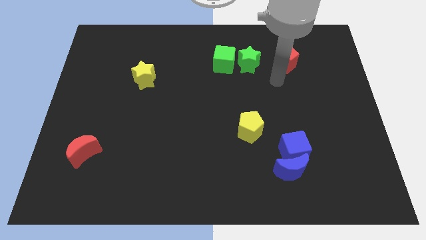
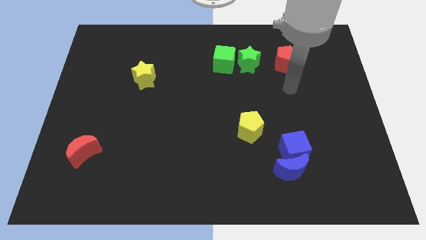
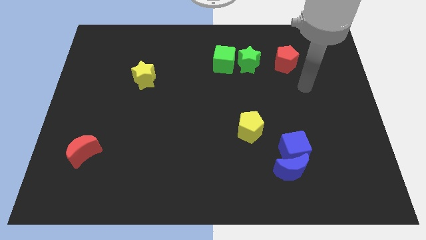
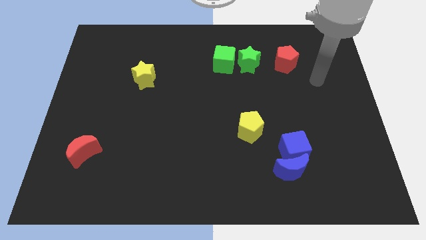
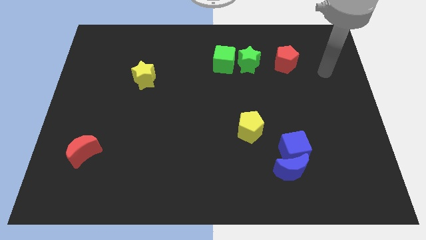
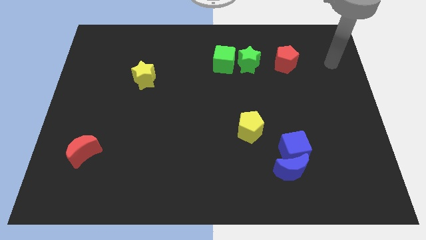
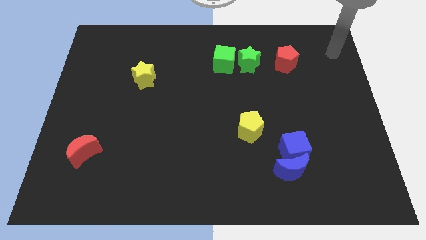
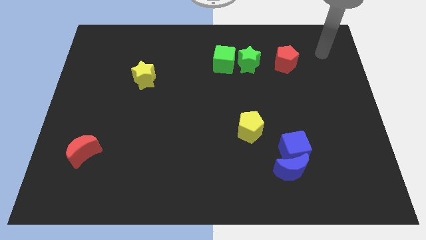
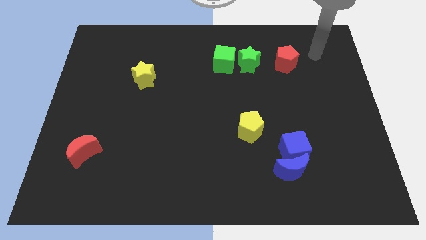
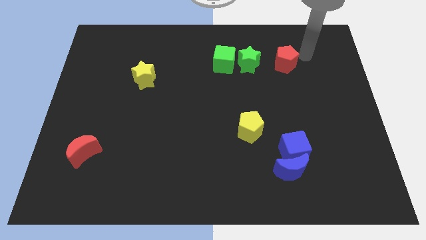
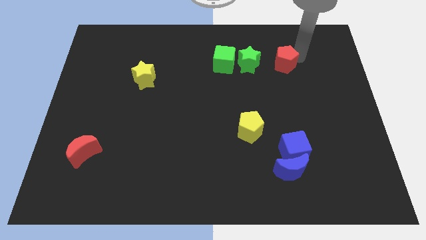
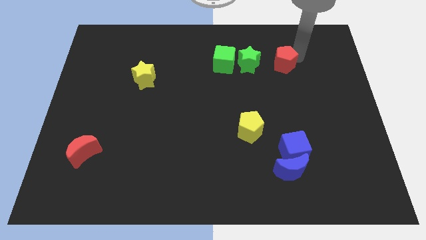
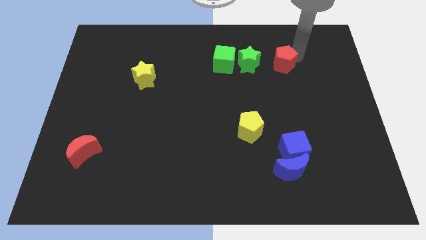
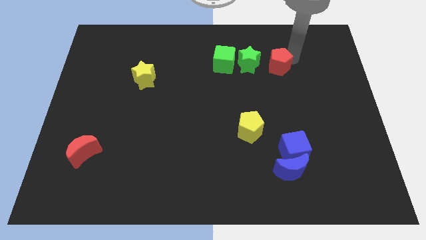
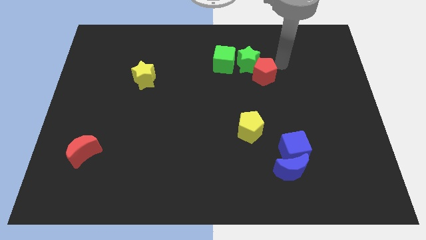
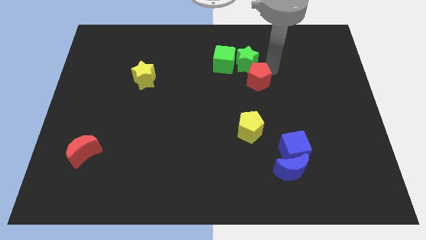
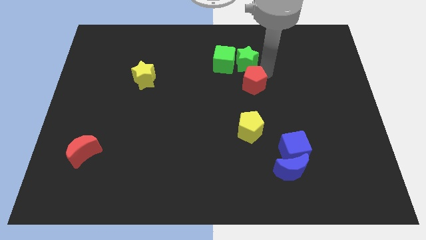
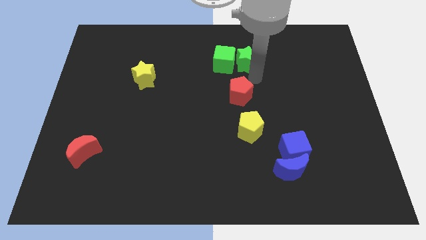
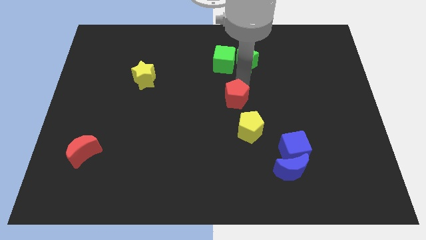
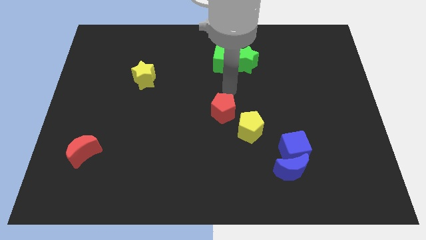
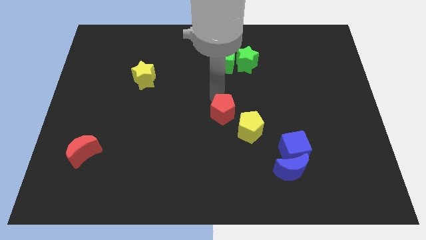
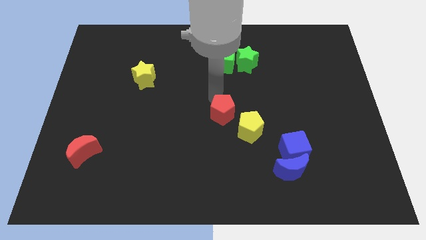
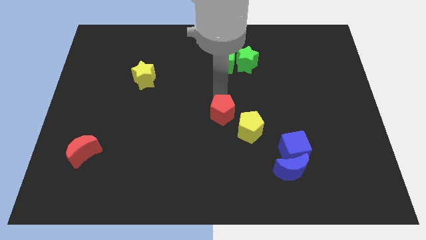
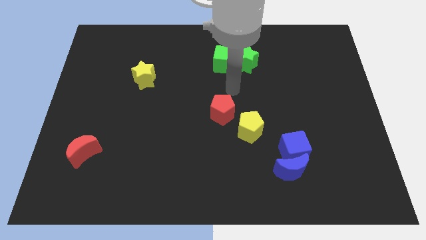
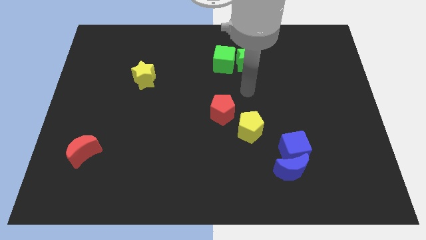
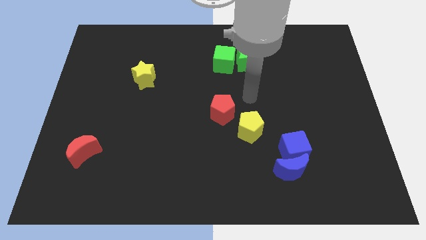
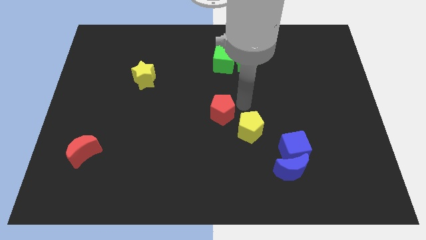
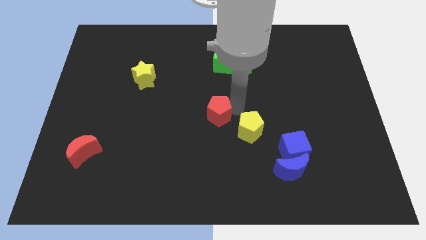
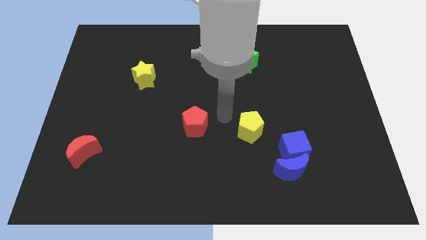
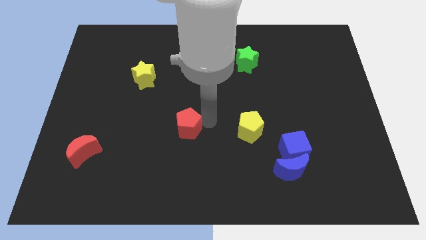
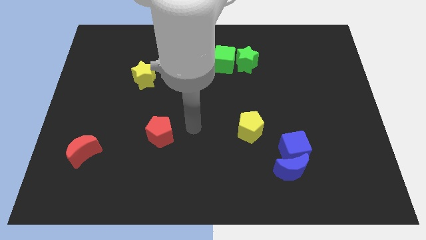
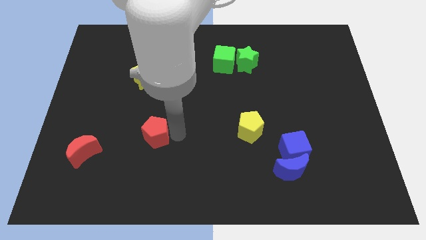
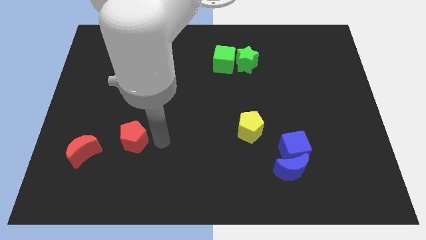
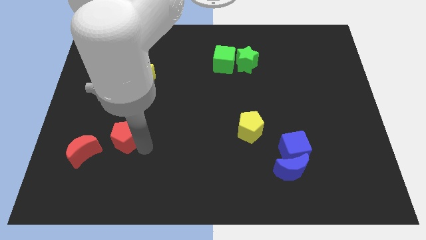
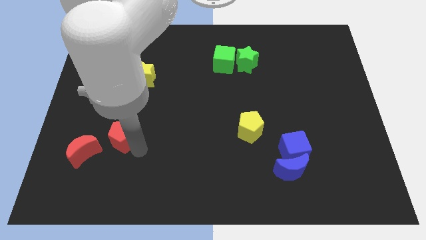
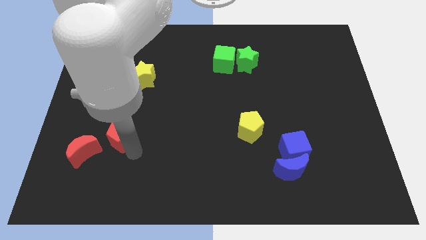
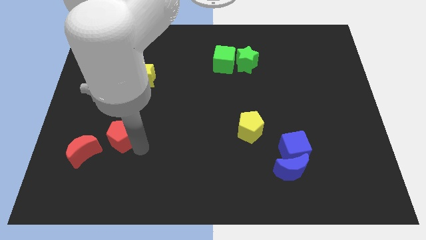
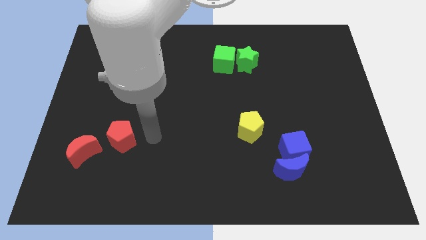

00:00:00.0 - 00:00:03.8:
move the red pentagon to the red moon

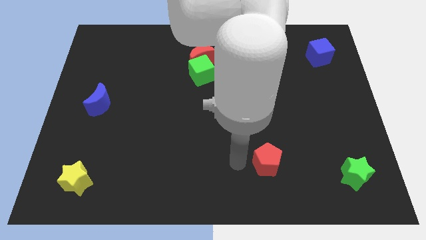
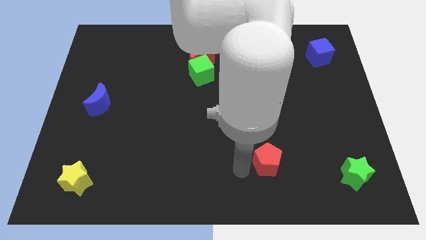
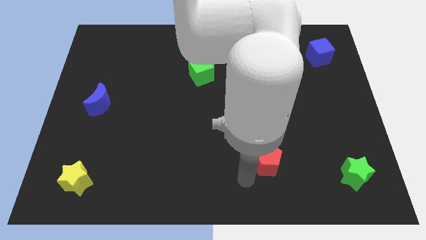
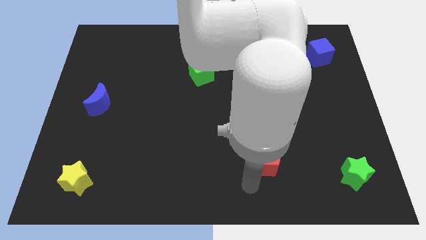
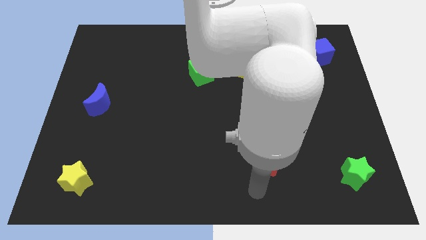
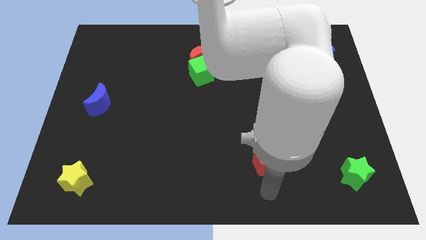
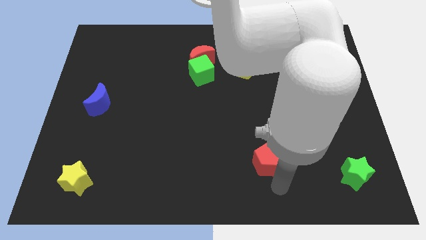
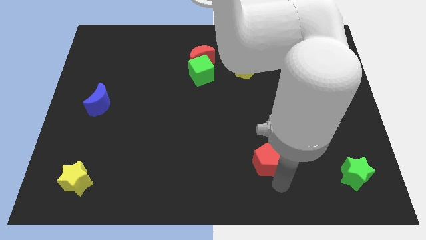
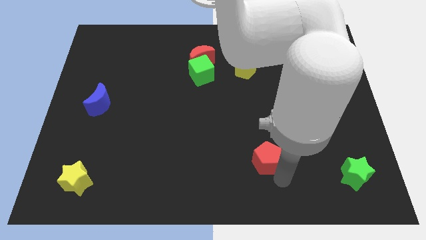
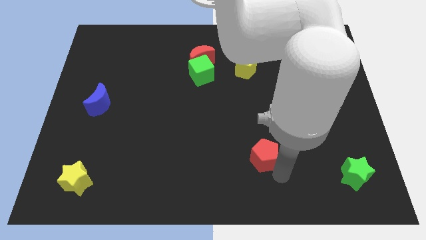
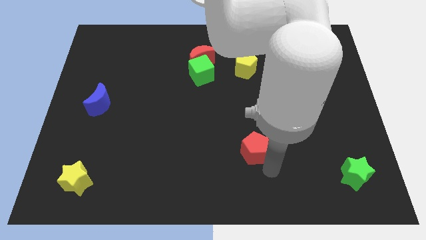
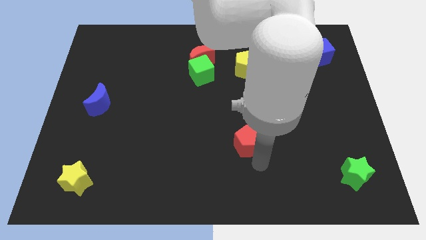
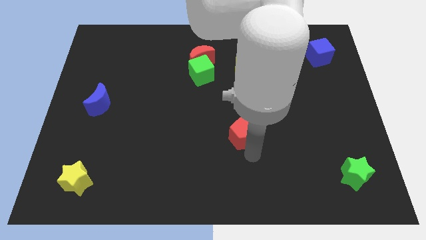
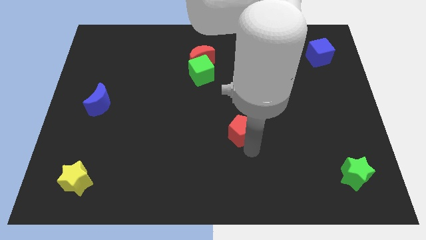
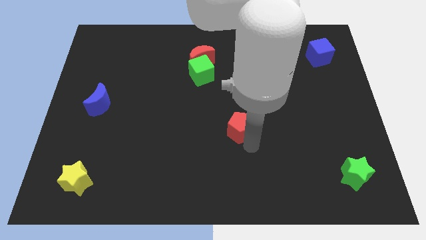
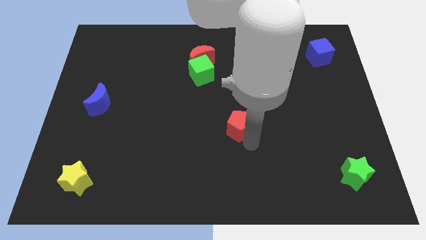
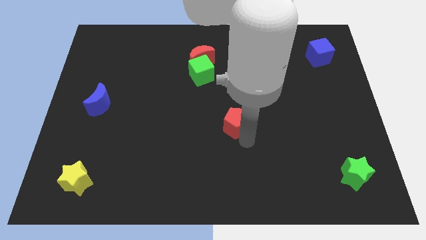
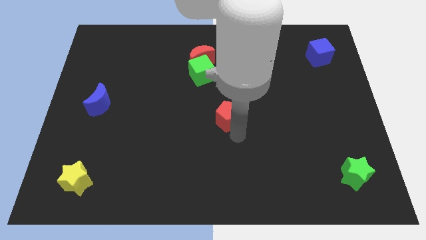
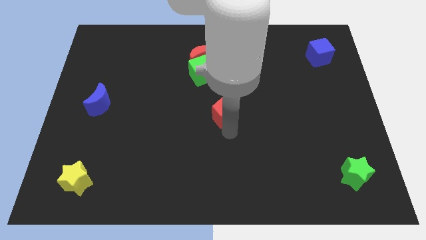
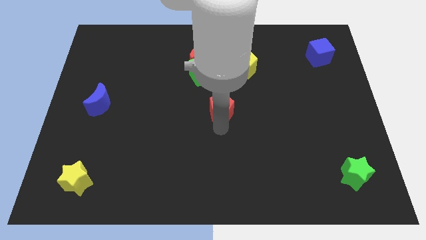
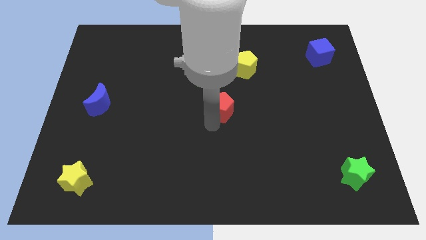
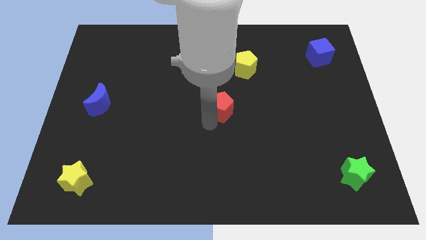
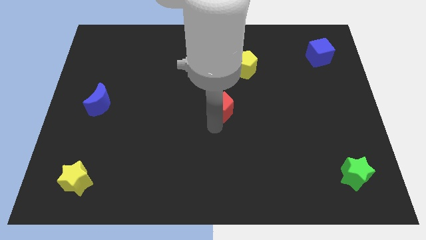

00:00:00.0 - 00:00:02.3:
place the red pentagon at the center of the board

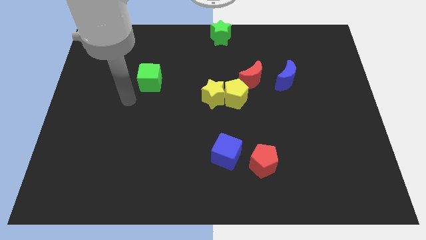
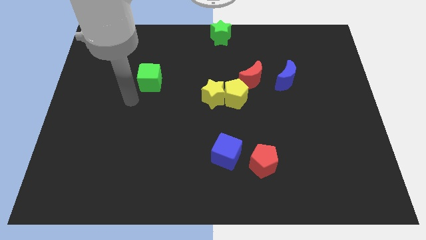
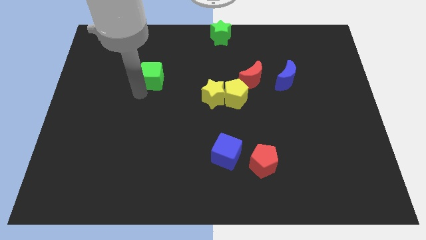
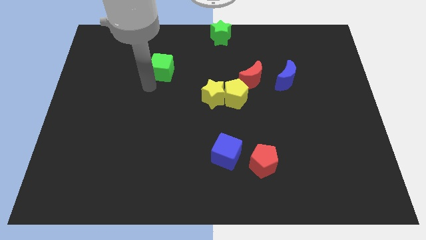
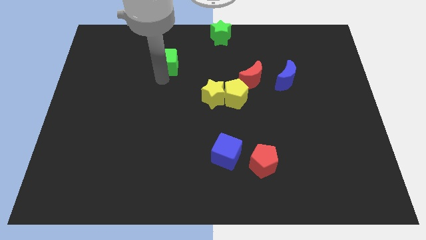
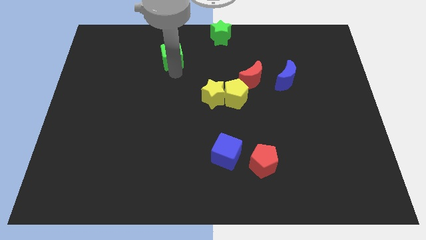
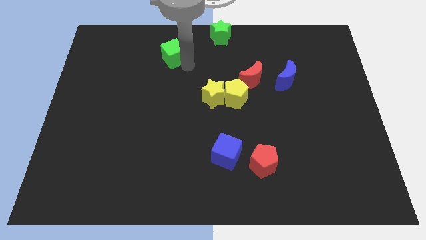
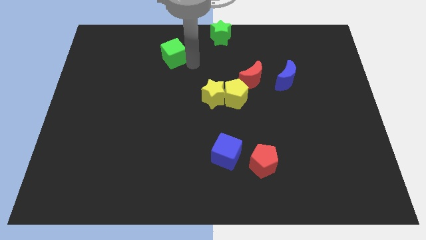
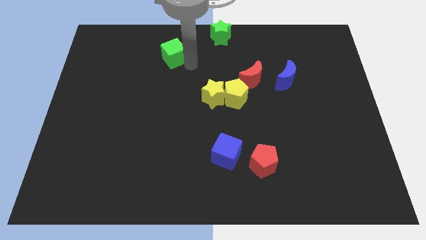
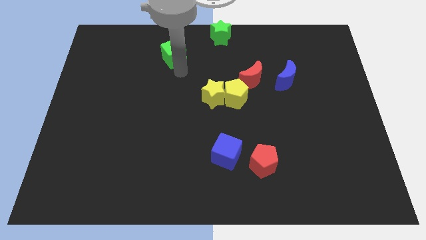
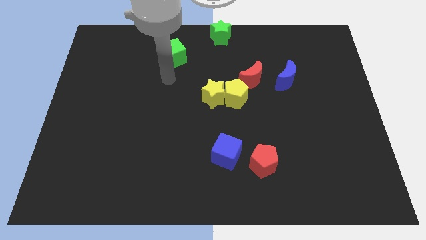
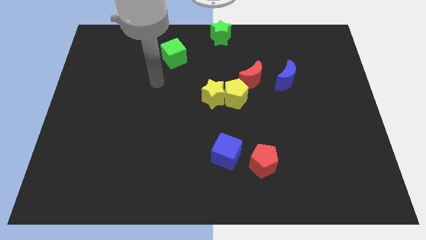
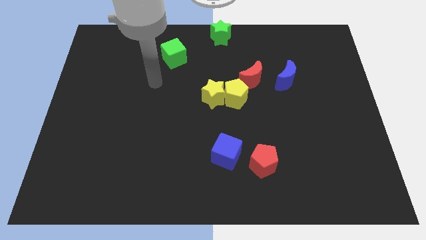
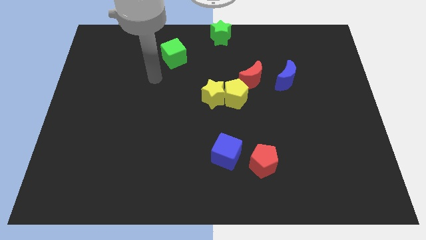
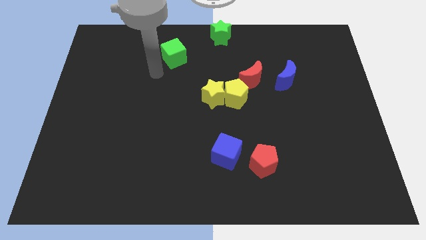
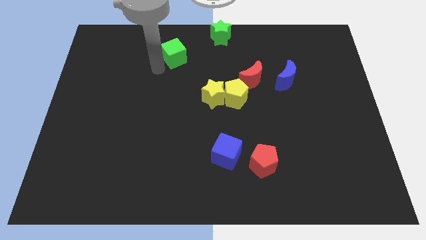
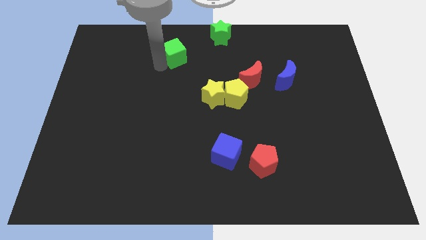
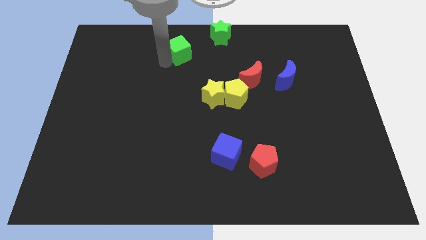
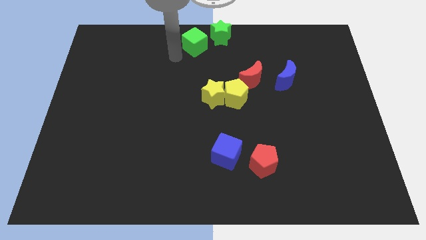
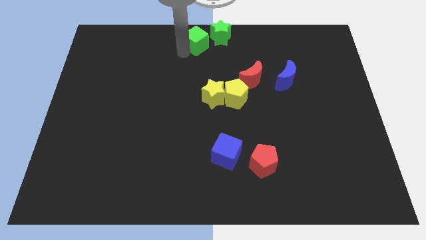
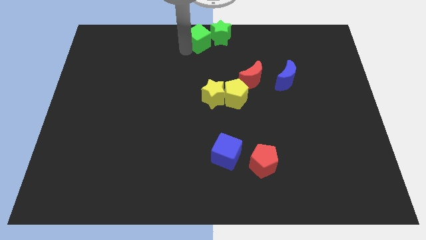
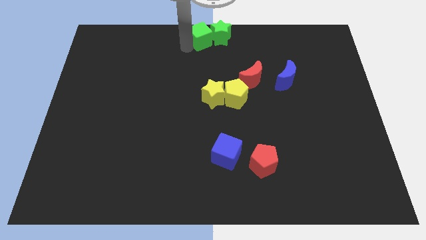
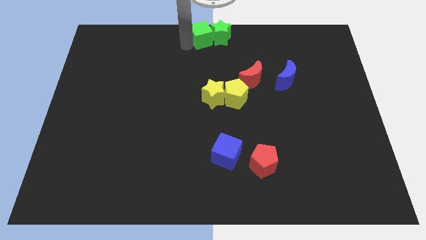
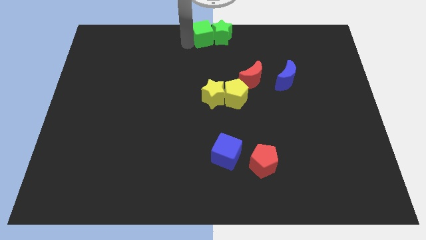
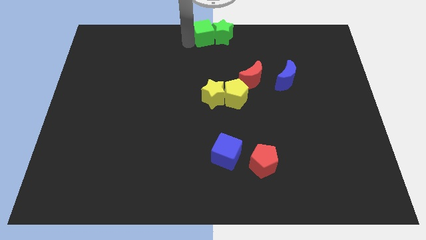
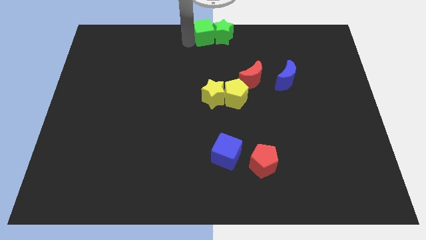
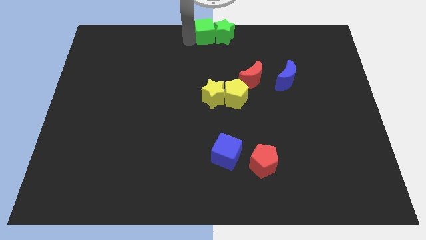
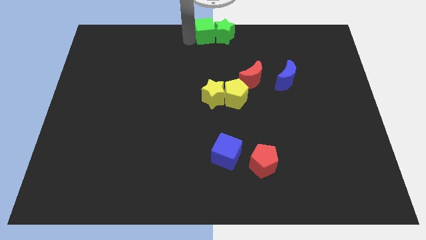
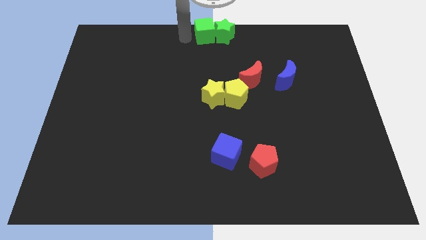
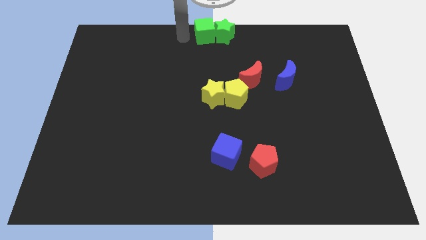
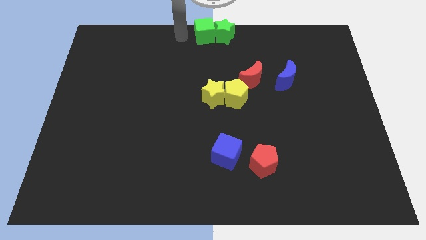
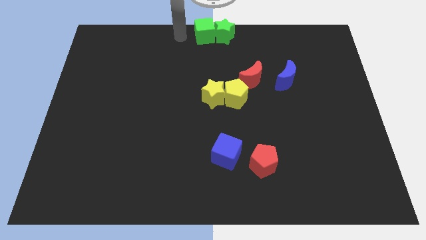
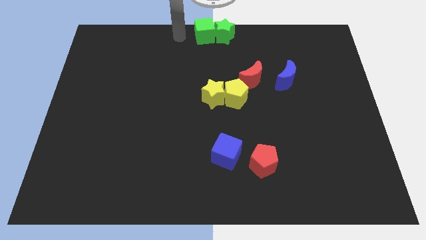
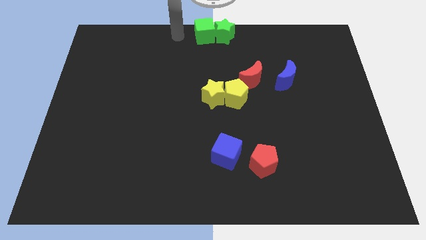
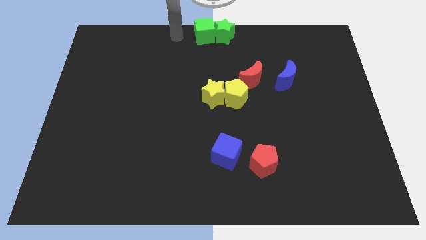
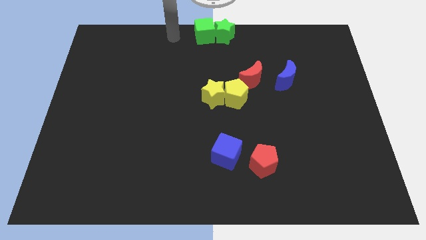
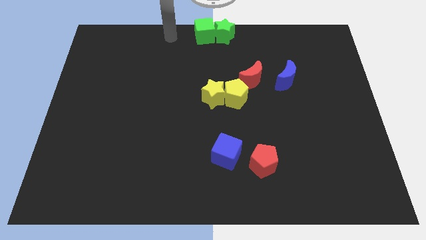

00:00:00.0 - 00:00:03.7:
put the green cube at the top center of the board
